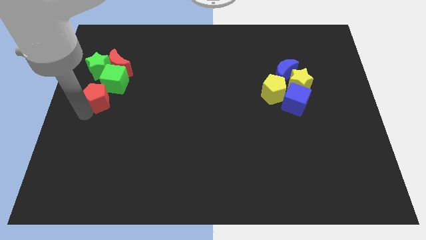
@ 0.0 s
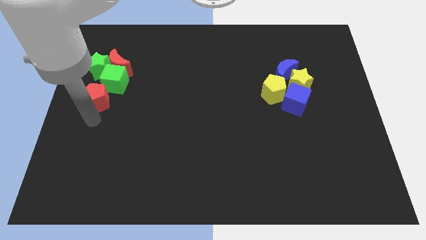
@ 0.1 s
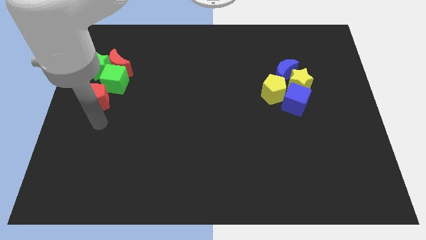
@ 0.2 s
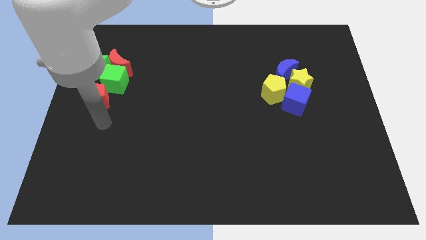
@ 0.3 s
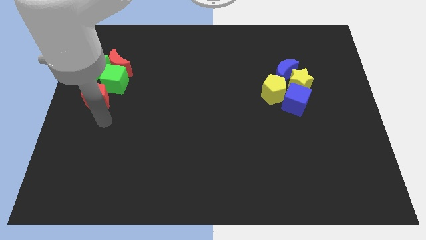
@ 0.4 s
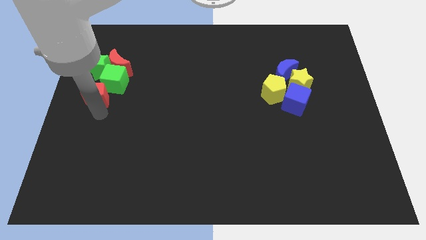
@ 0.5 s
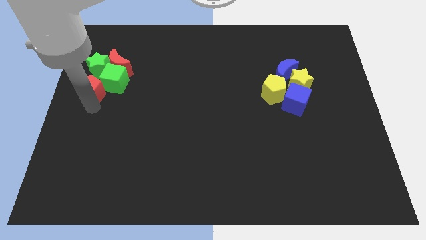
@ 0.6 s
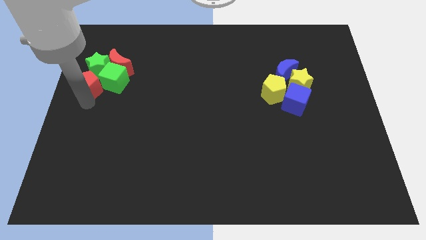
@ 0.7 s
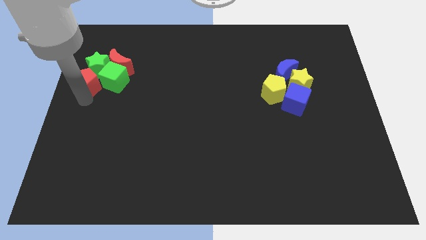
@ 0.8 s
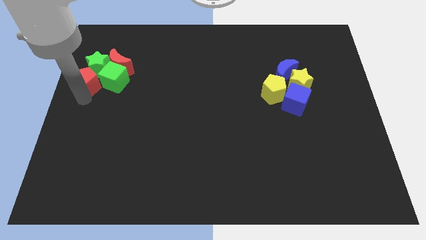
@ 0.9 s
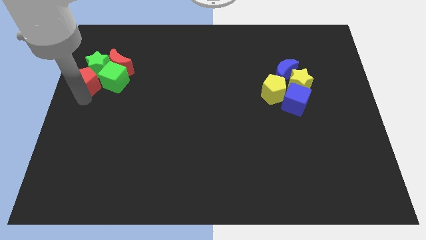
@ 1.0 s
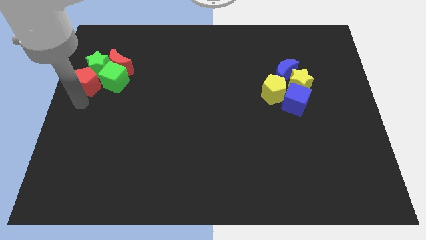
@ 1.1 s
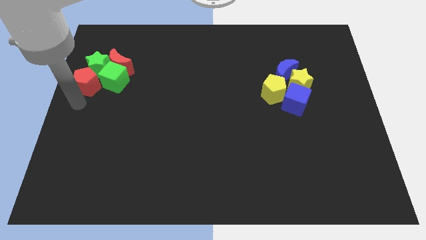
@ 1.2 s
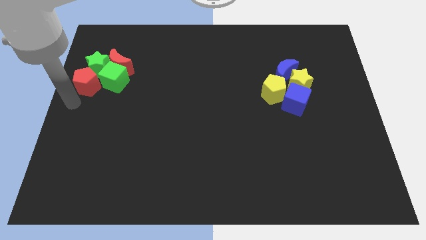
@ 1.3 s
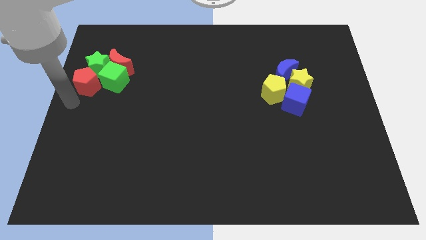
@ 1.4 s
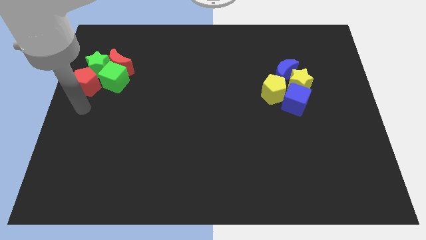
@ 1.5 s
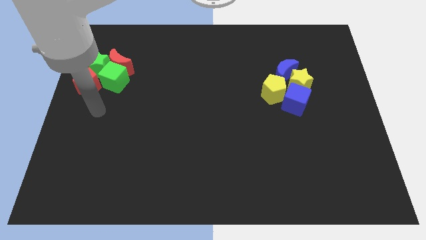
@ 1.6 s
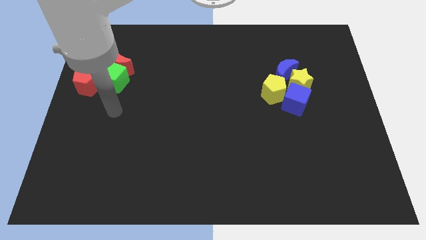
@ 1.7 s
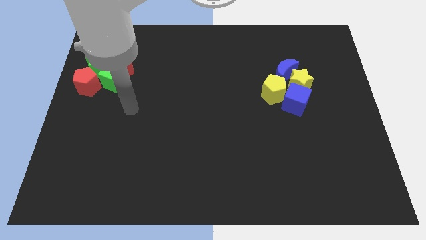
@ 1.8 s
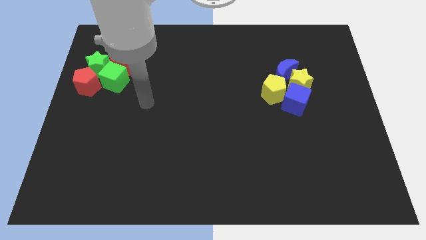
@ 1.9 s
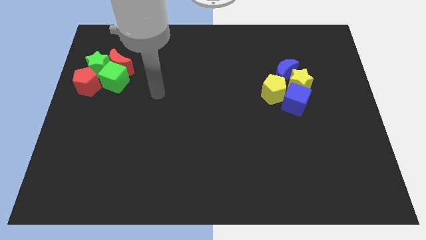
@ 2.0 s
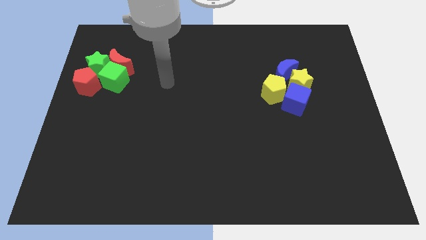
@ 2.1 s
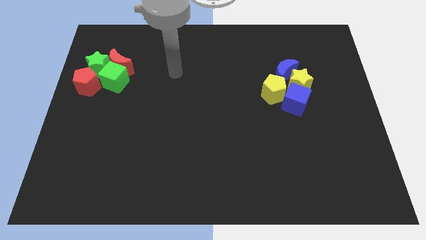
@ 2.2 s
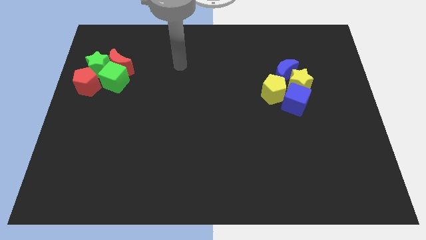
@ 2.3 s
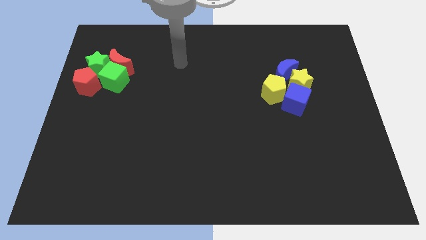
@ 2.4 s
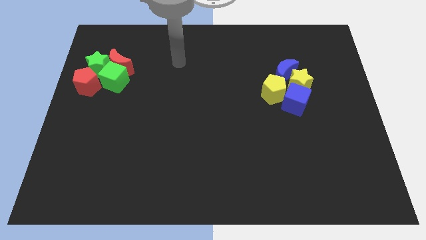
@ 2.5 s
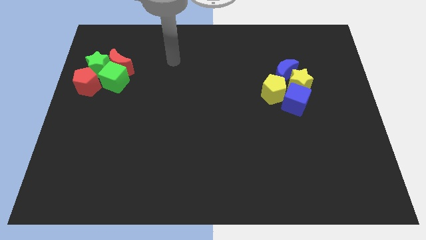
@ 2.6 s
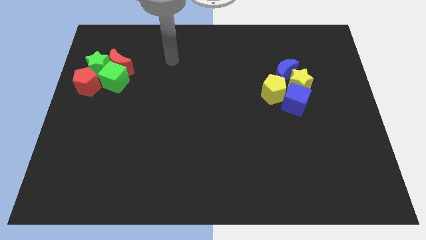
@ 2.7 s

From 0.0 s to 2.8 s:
move your arm from red pentagon to top

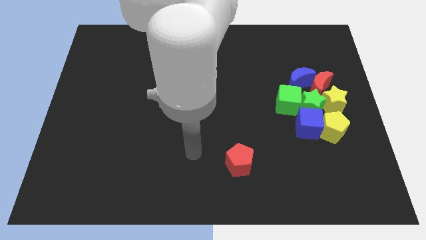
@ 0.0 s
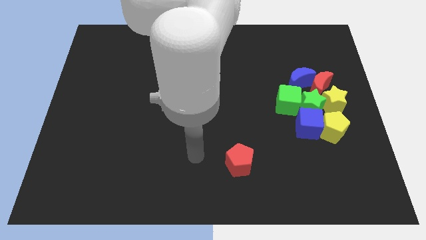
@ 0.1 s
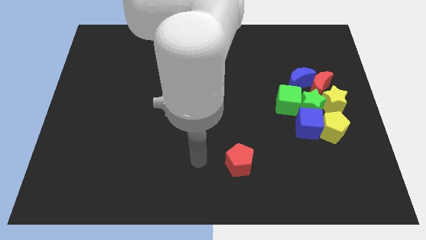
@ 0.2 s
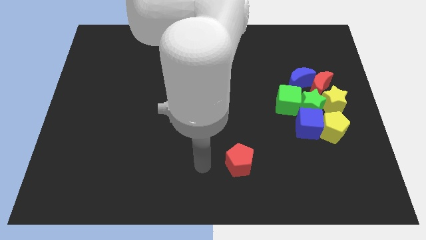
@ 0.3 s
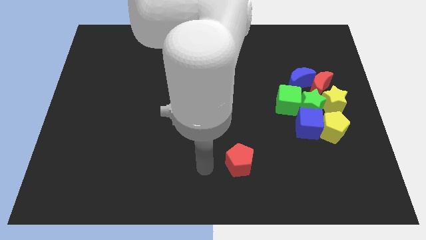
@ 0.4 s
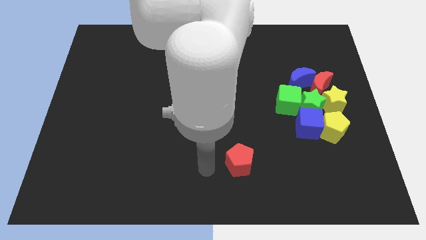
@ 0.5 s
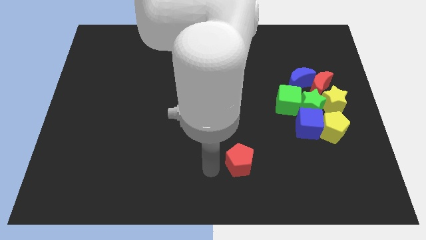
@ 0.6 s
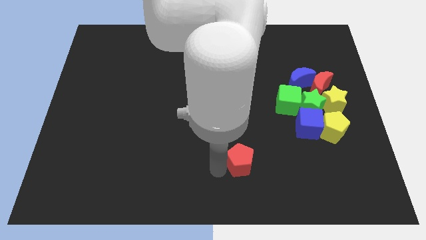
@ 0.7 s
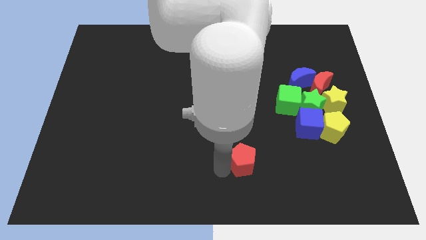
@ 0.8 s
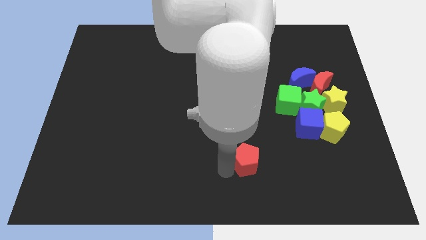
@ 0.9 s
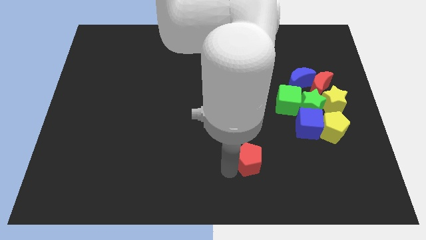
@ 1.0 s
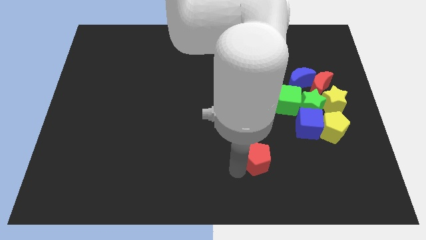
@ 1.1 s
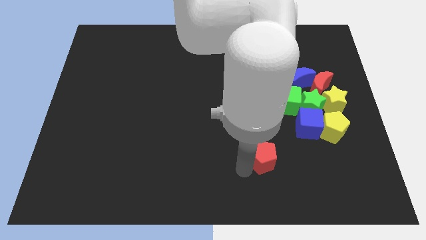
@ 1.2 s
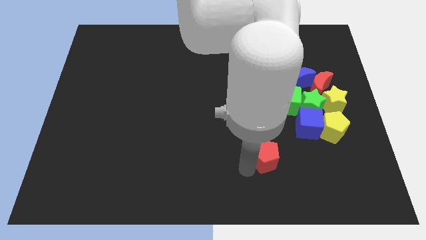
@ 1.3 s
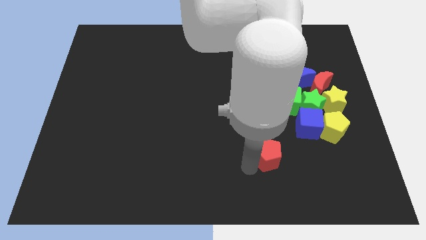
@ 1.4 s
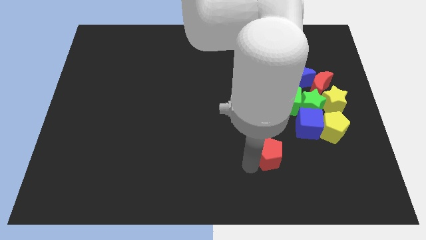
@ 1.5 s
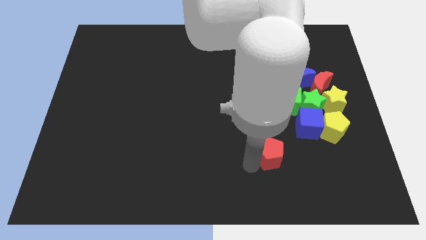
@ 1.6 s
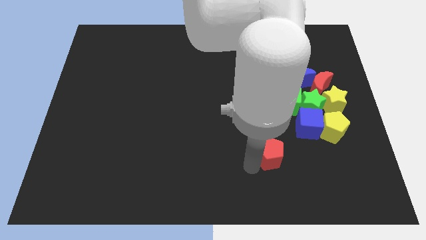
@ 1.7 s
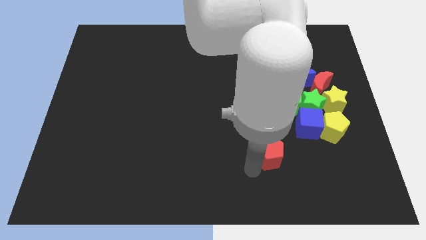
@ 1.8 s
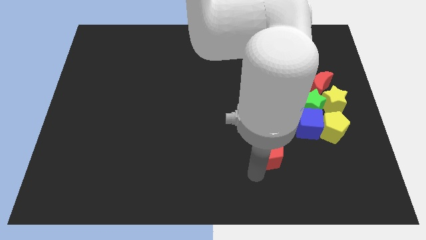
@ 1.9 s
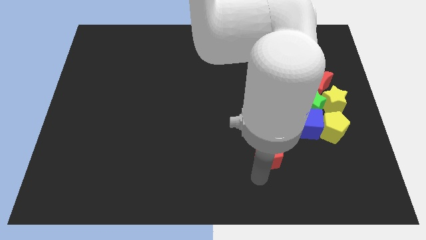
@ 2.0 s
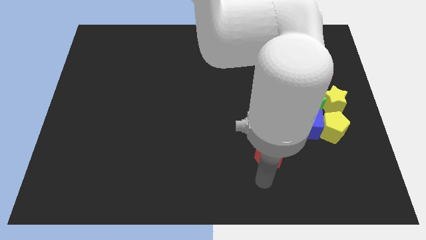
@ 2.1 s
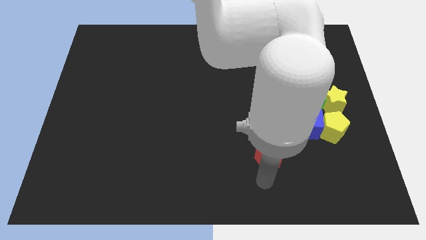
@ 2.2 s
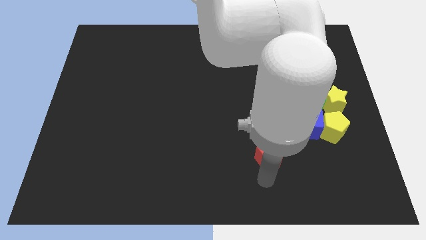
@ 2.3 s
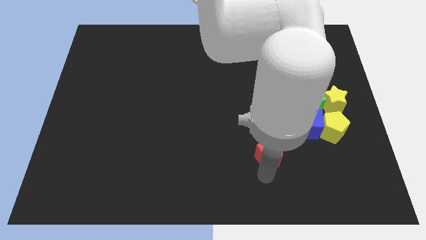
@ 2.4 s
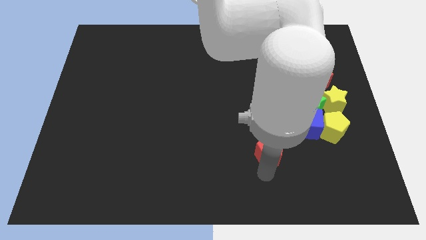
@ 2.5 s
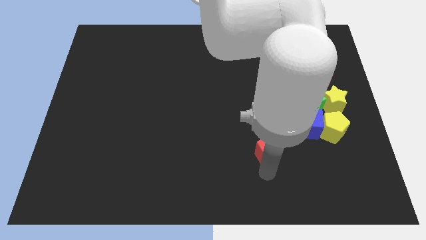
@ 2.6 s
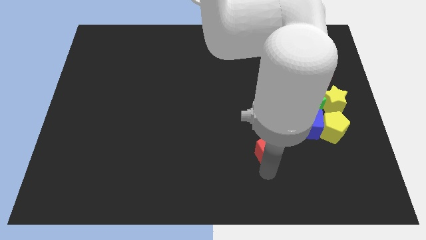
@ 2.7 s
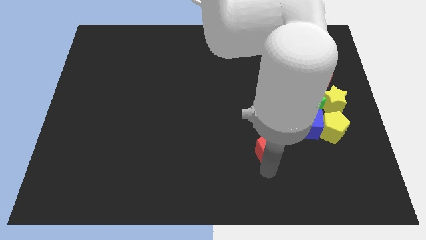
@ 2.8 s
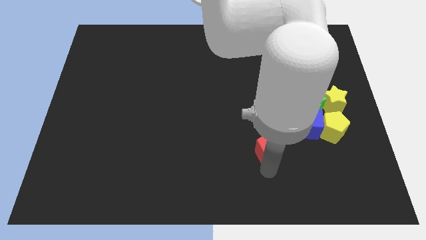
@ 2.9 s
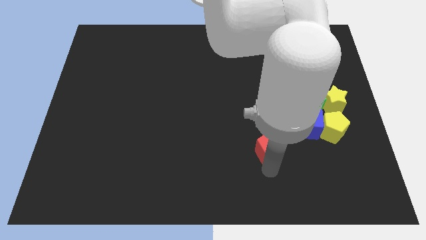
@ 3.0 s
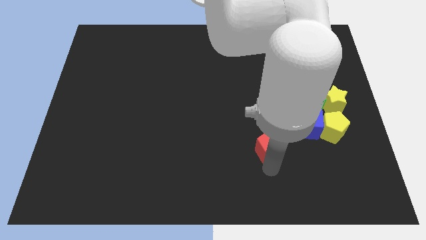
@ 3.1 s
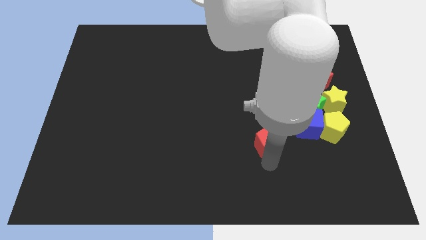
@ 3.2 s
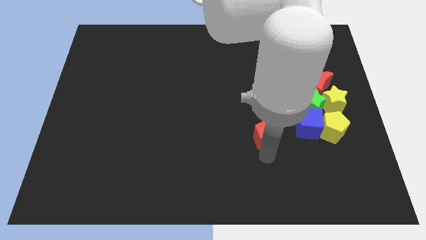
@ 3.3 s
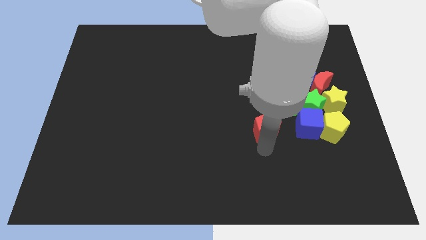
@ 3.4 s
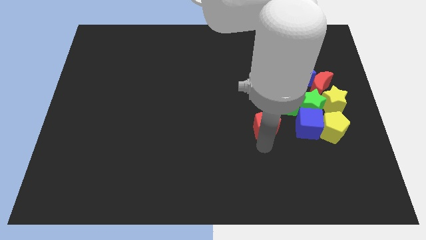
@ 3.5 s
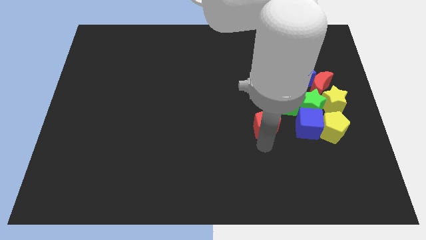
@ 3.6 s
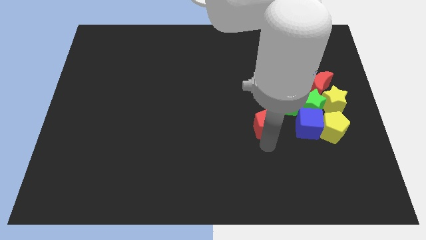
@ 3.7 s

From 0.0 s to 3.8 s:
place the red pentagon to the left of the blue cube

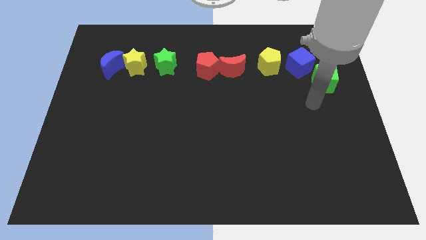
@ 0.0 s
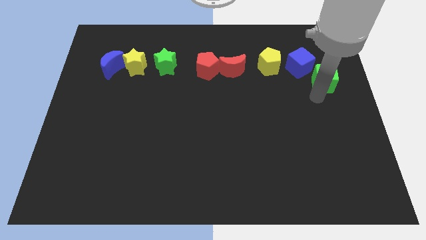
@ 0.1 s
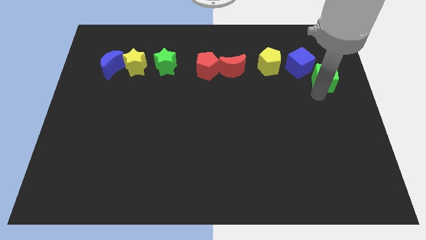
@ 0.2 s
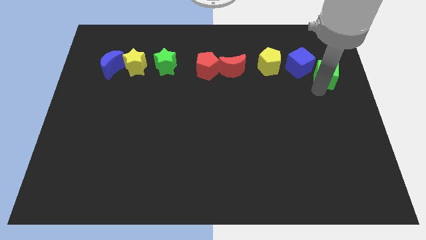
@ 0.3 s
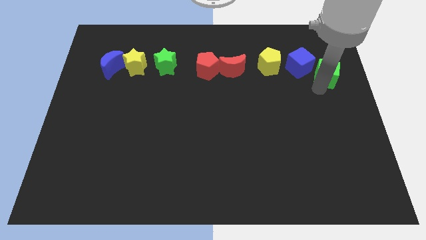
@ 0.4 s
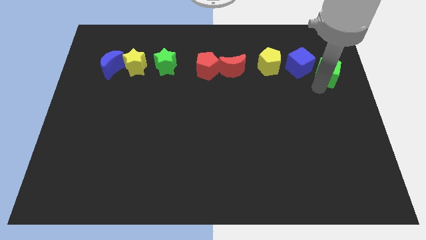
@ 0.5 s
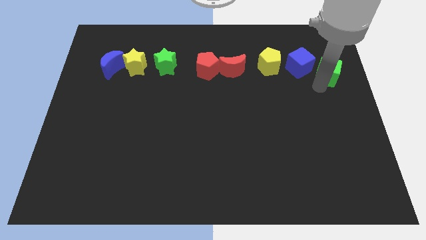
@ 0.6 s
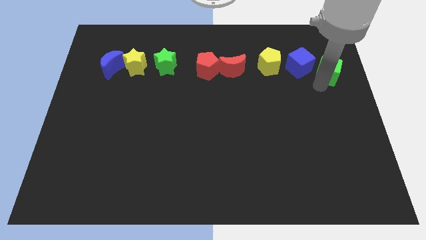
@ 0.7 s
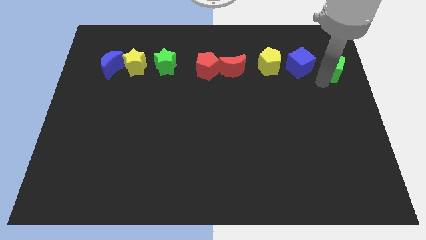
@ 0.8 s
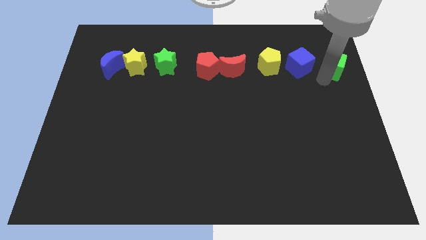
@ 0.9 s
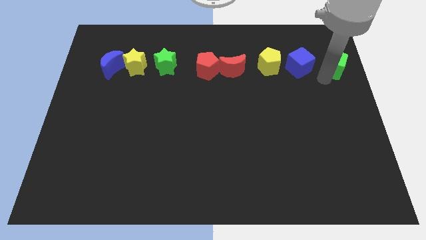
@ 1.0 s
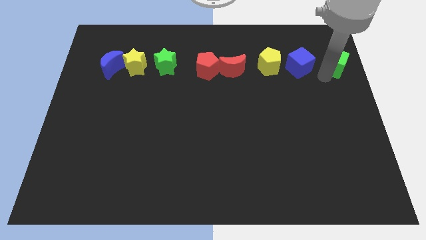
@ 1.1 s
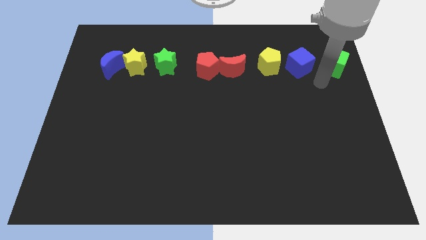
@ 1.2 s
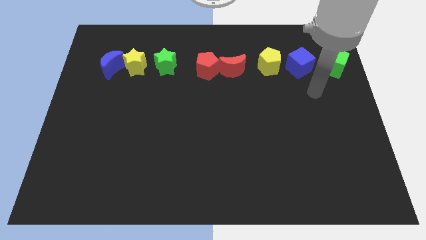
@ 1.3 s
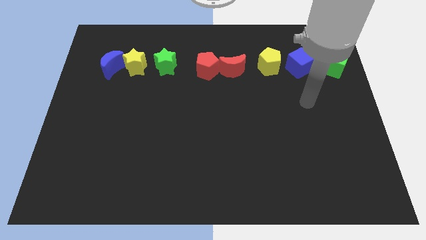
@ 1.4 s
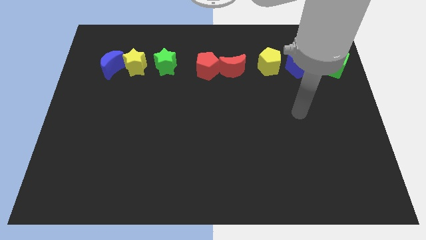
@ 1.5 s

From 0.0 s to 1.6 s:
line the blocks up horizontally

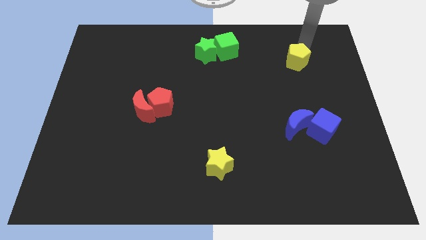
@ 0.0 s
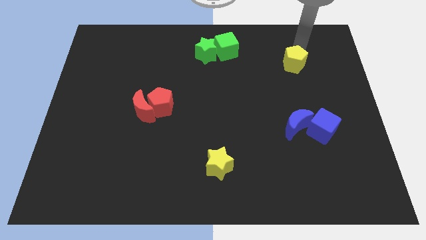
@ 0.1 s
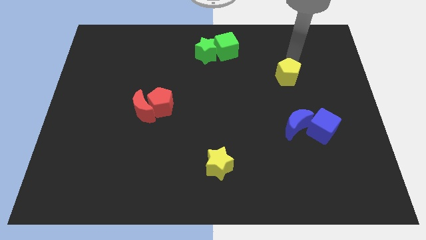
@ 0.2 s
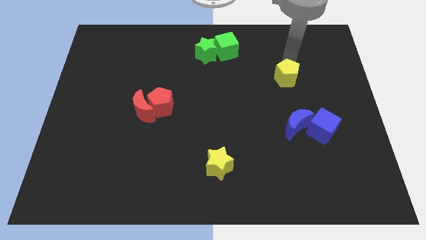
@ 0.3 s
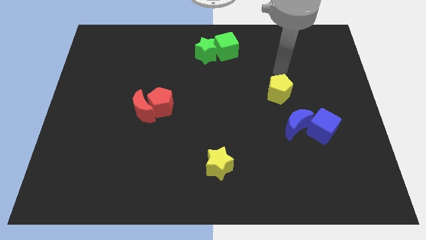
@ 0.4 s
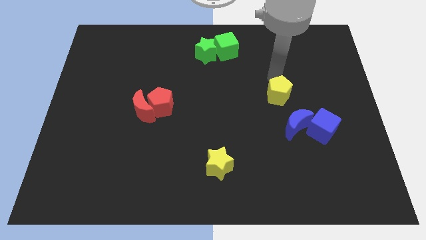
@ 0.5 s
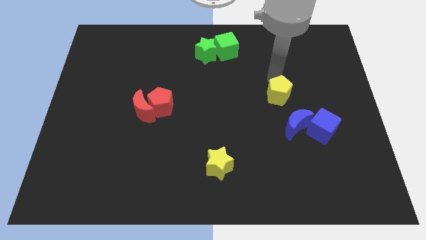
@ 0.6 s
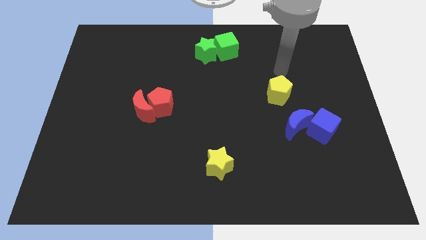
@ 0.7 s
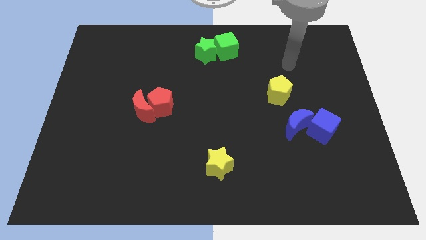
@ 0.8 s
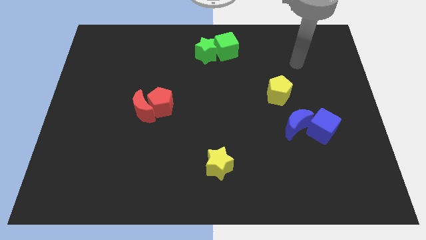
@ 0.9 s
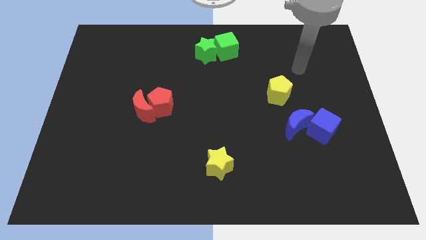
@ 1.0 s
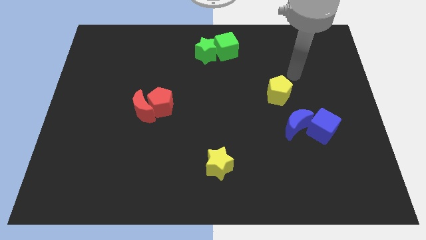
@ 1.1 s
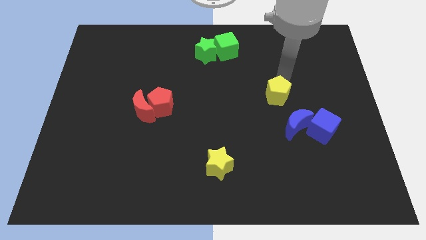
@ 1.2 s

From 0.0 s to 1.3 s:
push the yellow pentagon towards the bottom side slightly
